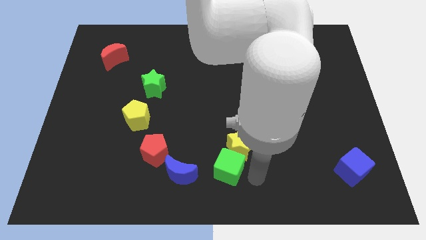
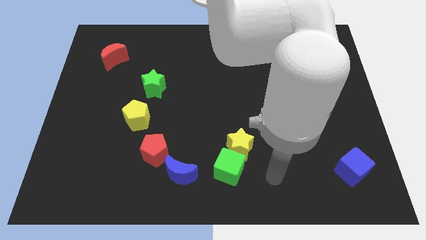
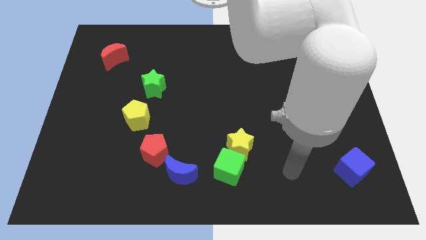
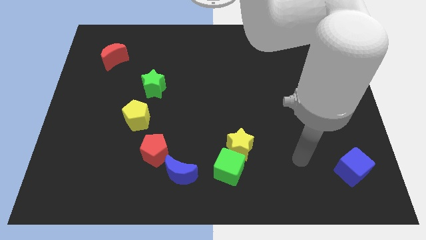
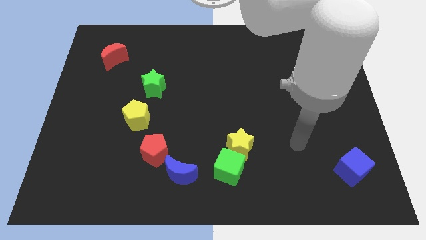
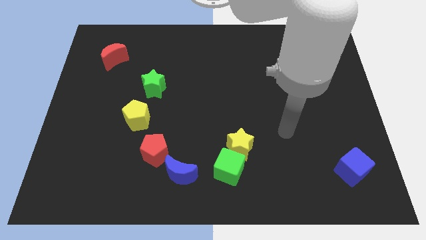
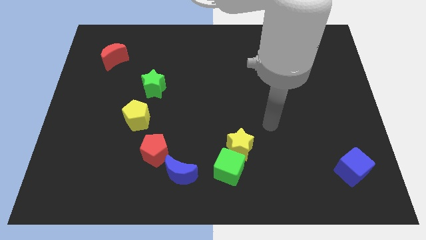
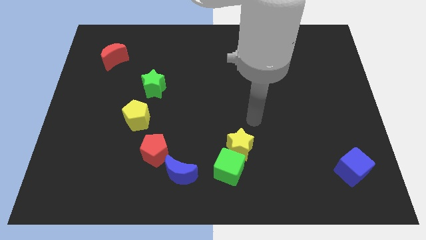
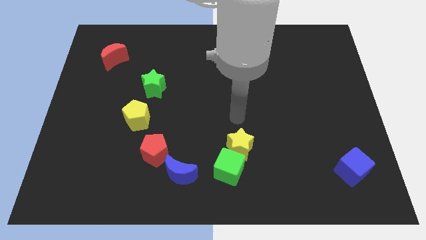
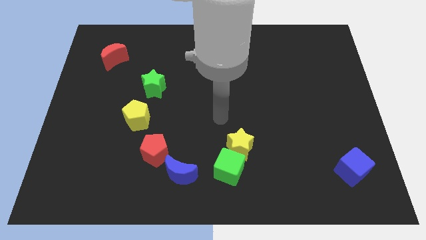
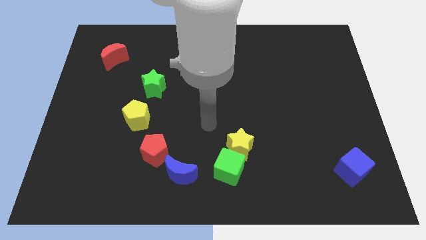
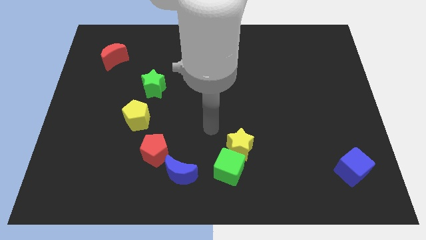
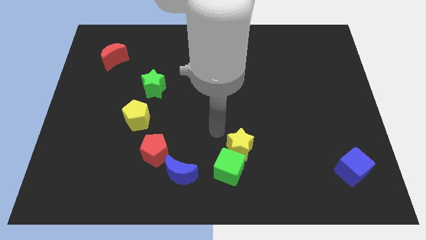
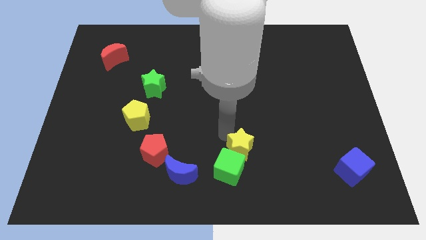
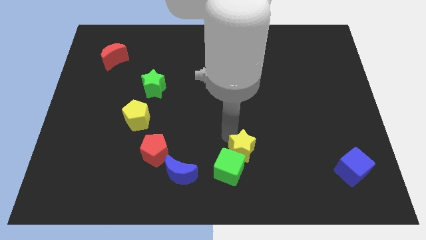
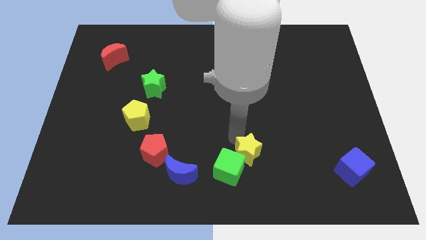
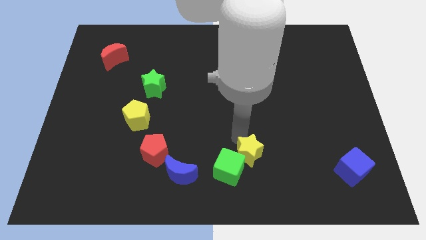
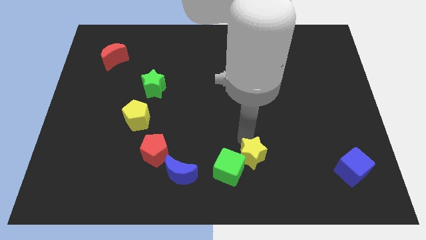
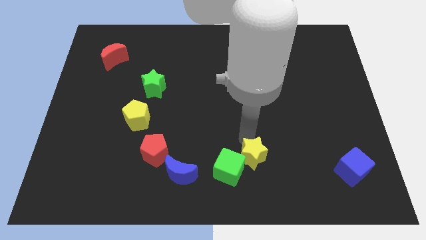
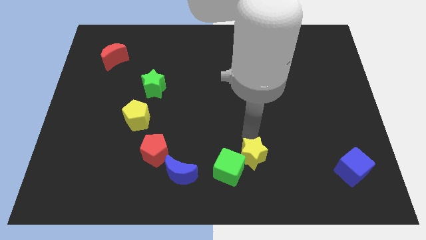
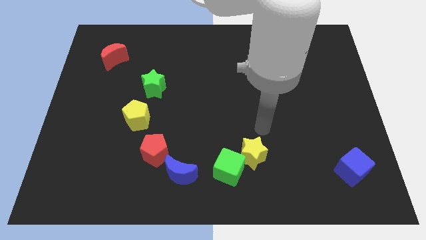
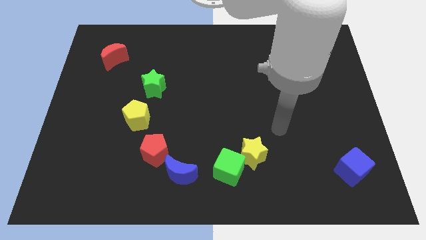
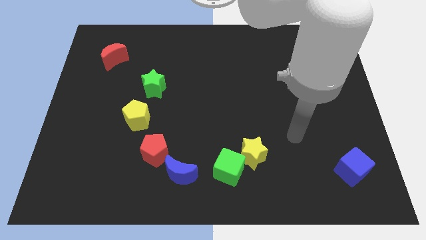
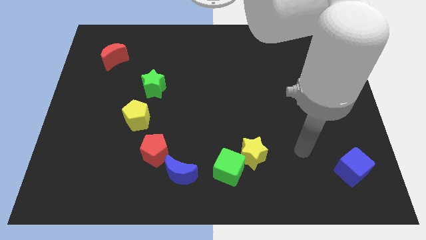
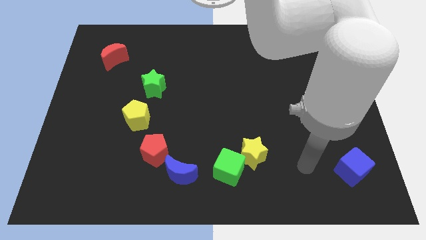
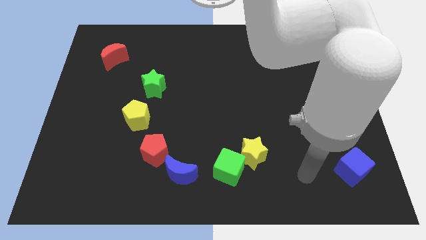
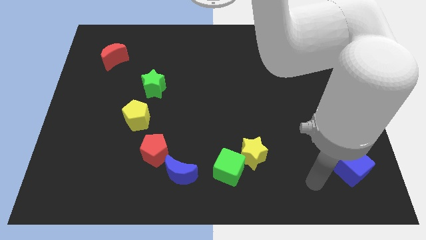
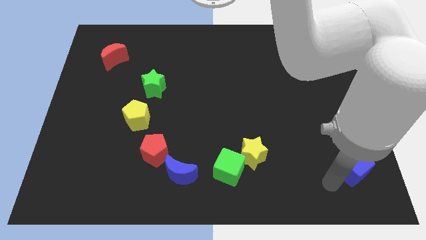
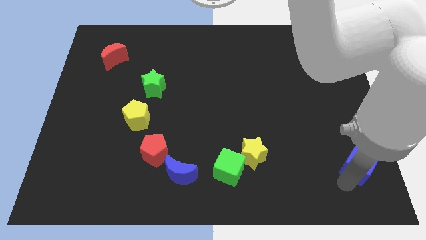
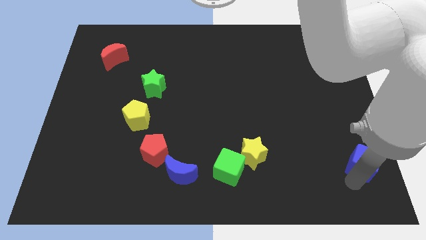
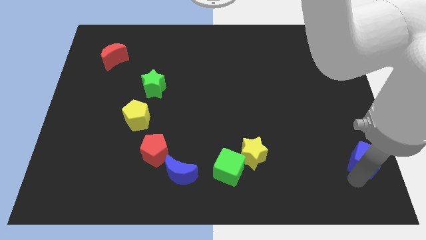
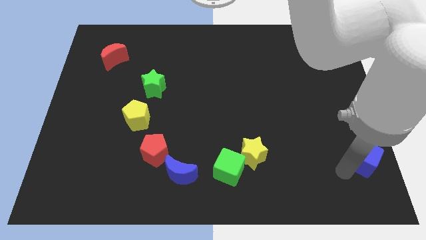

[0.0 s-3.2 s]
move your arm close to the blue cube

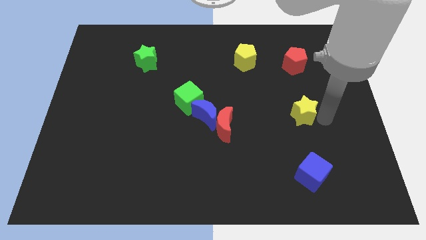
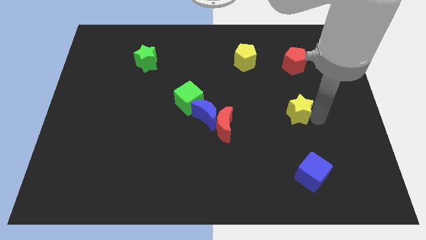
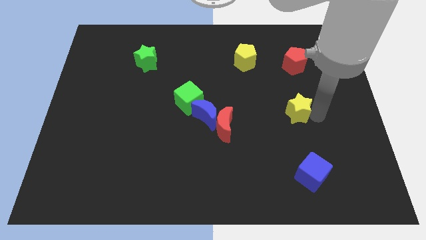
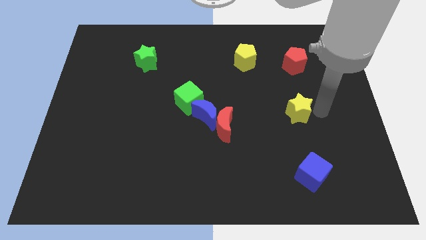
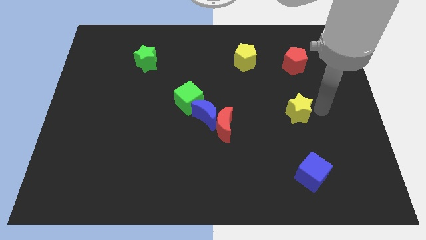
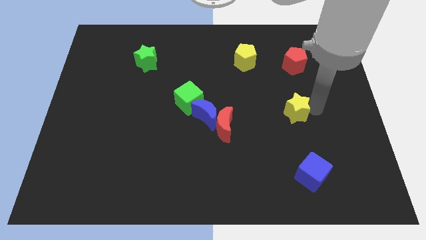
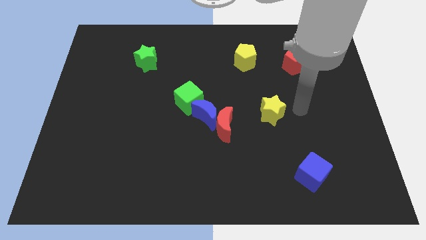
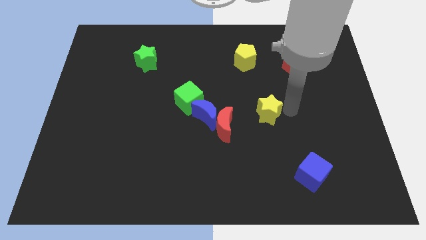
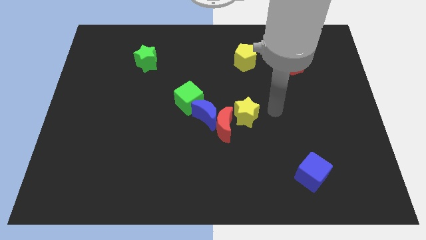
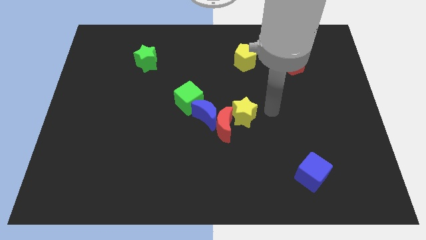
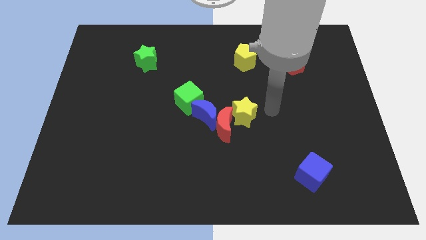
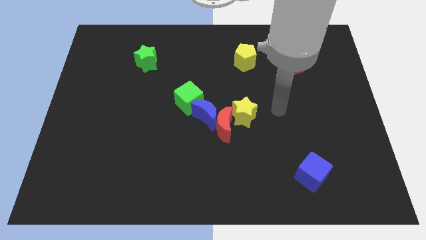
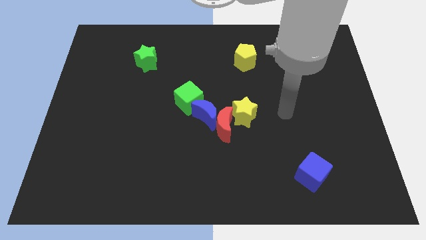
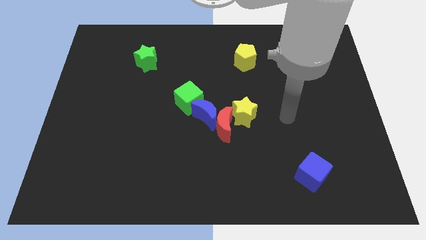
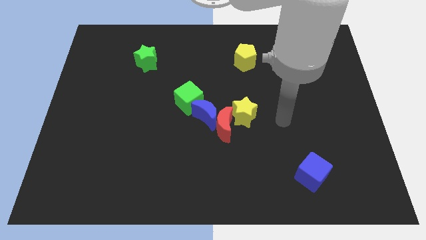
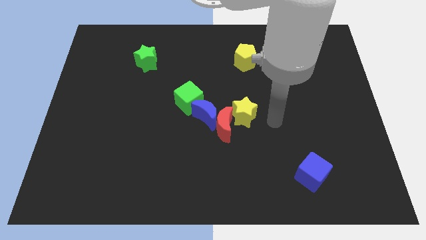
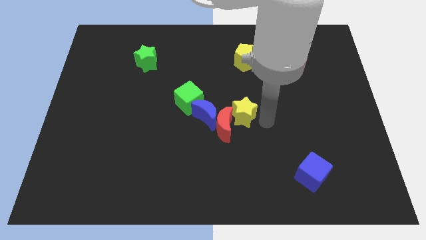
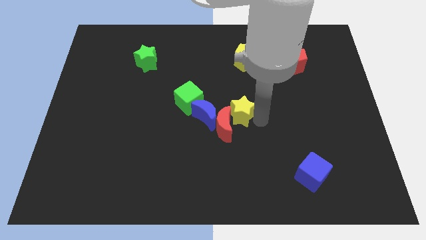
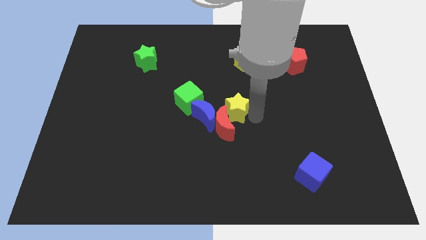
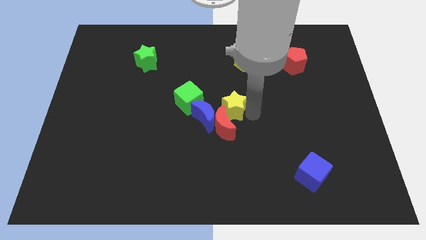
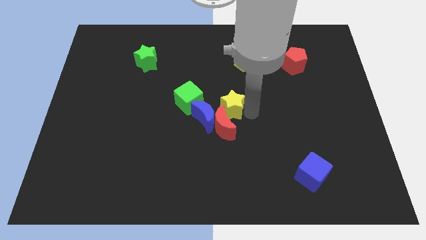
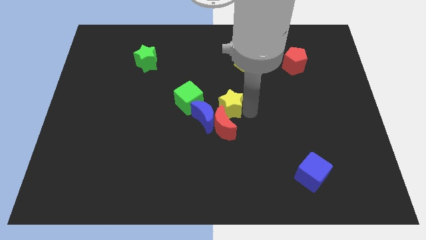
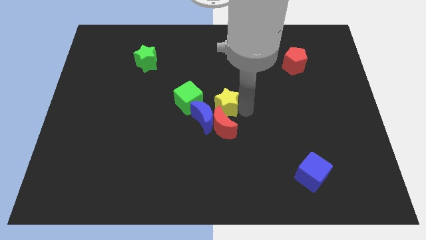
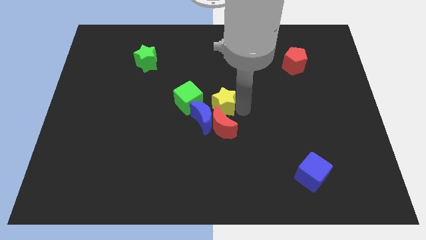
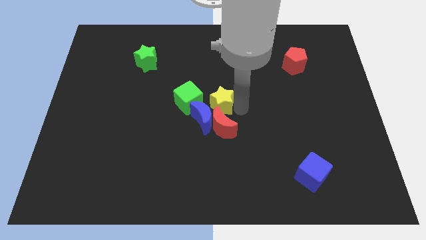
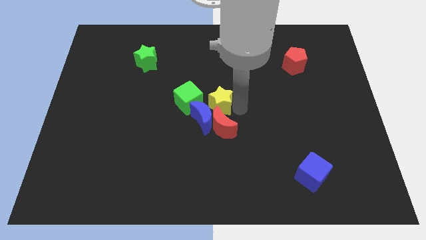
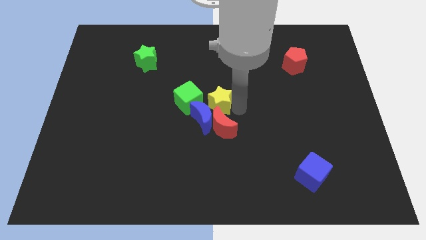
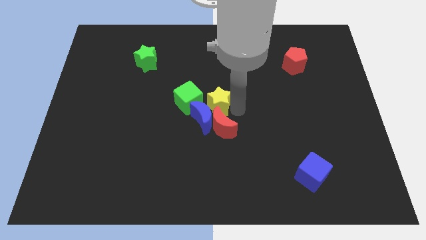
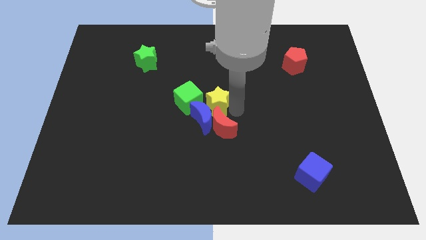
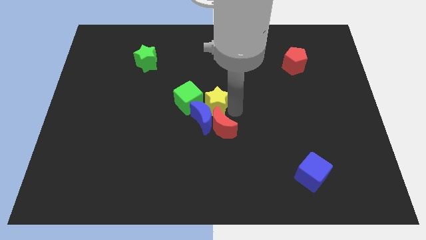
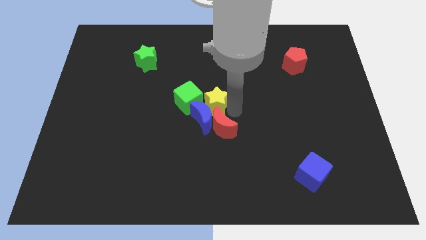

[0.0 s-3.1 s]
place the yellow star top of red moon

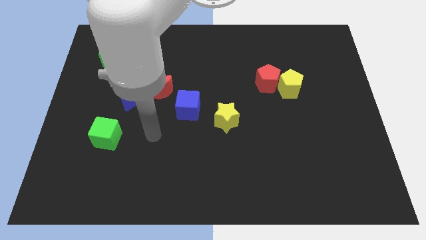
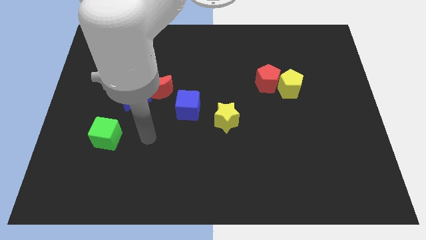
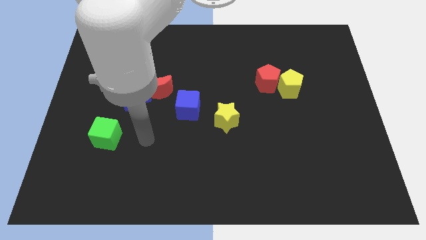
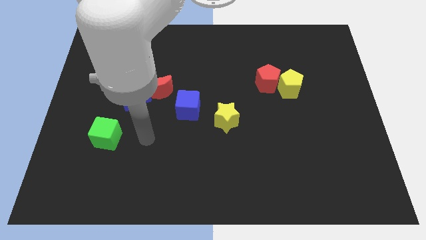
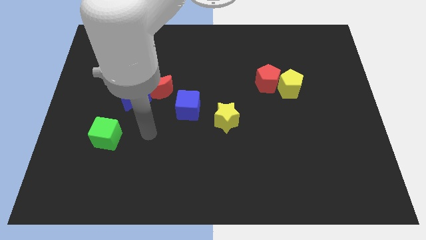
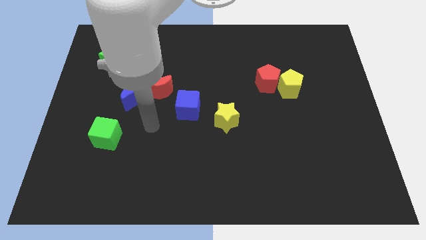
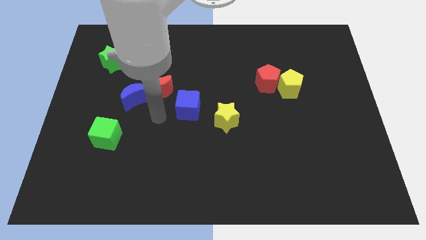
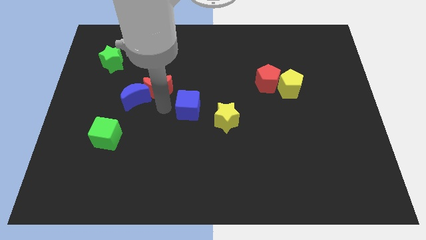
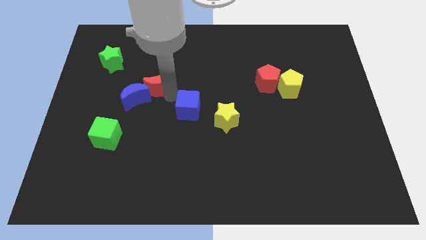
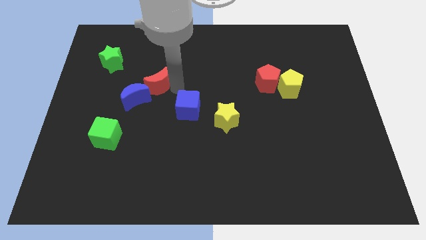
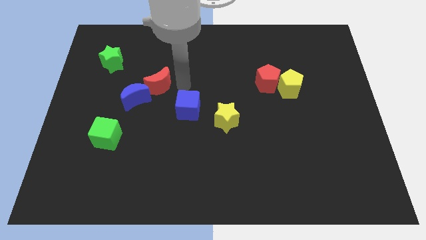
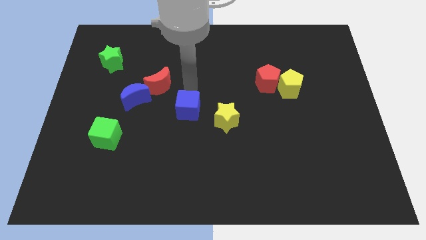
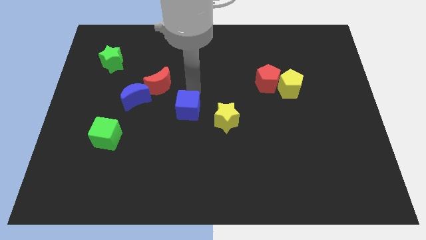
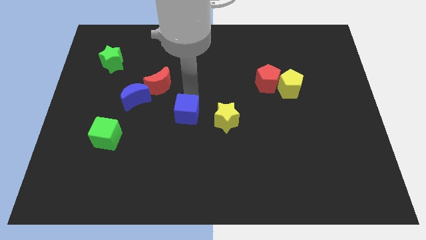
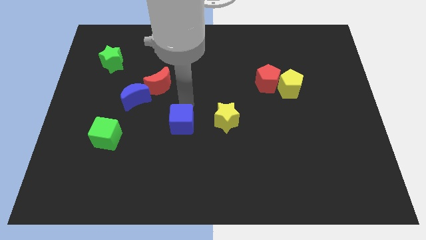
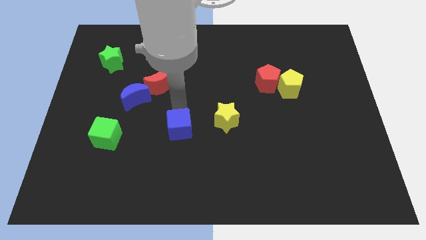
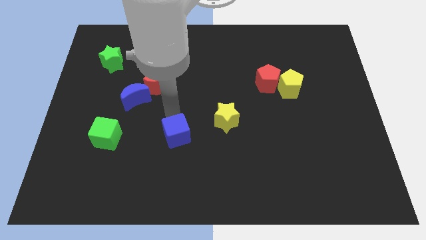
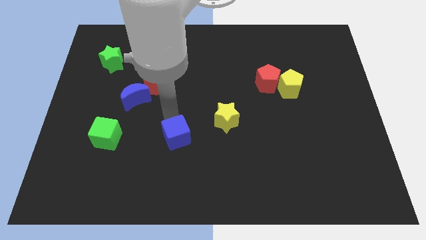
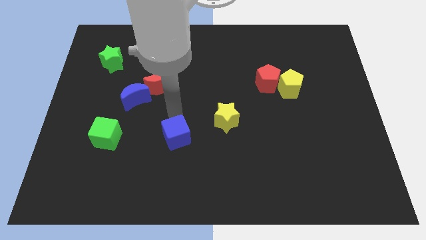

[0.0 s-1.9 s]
move the blue cube parallel to green cube

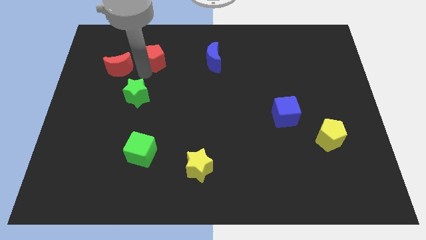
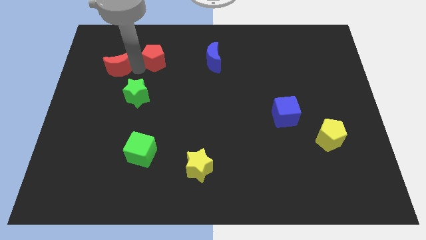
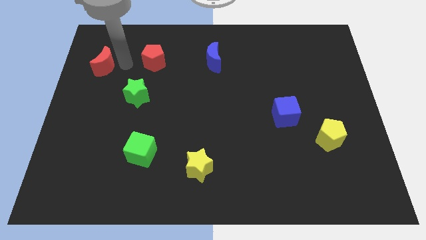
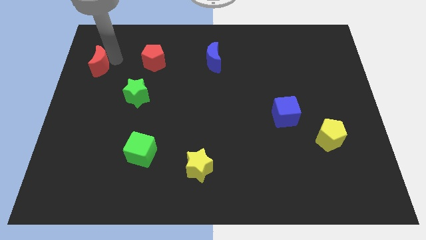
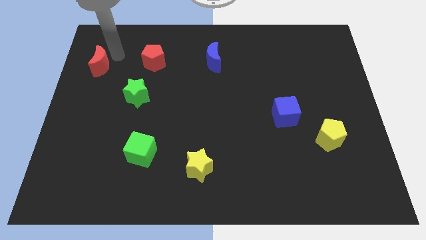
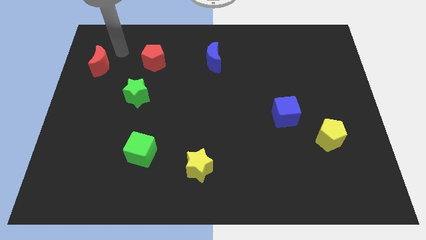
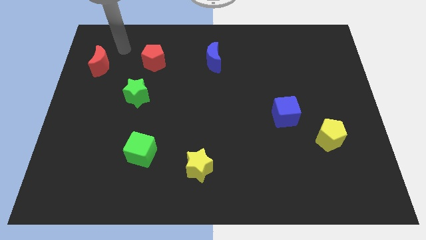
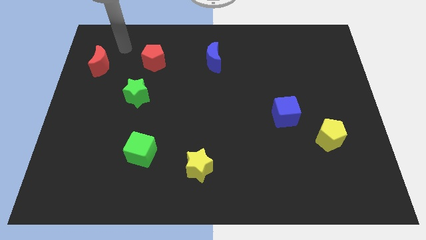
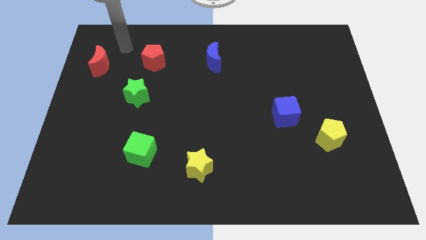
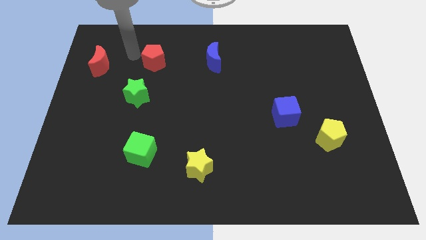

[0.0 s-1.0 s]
slide the red crescent slightly to the left
